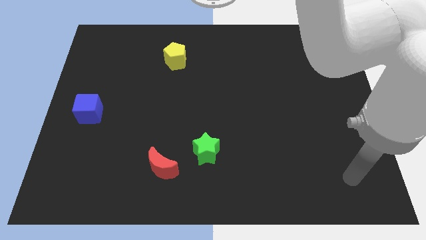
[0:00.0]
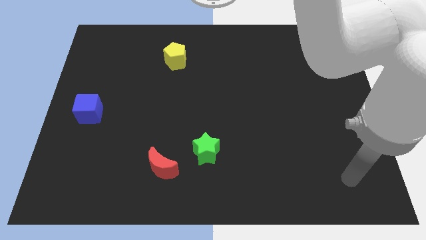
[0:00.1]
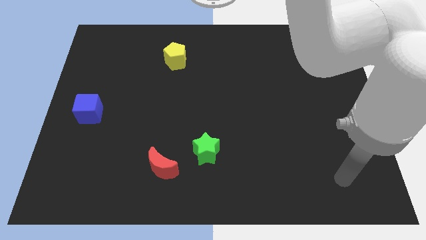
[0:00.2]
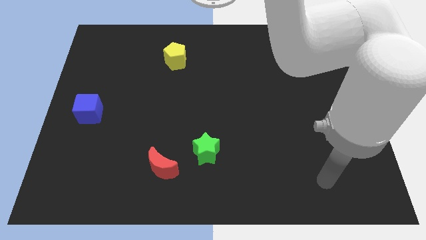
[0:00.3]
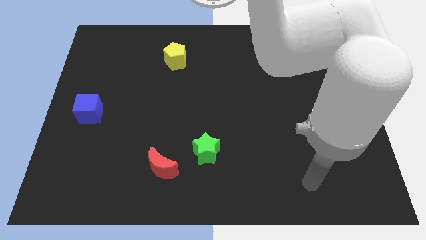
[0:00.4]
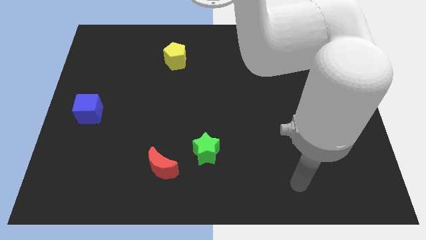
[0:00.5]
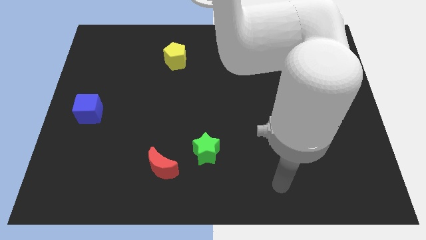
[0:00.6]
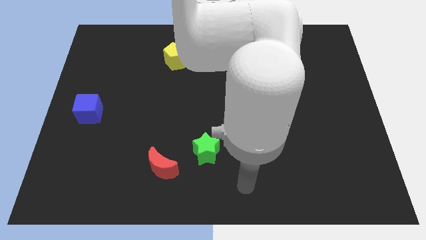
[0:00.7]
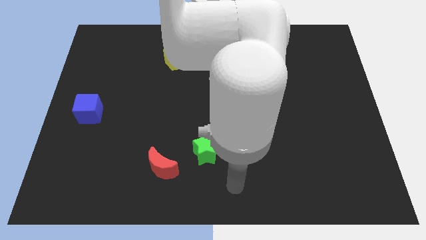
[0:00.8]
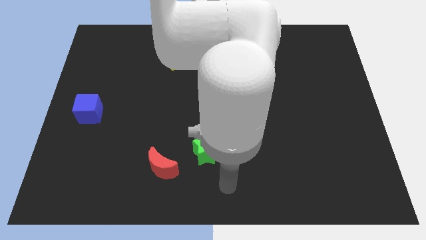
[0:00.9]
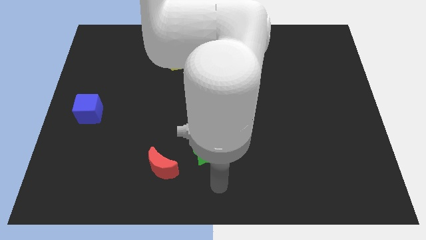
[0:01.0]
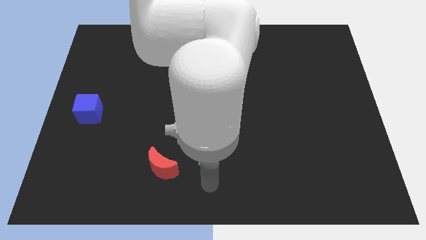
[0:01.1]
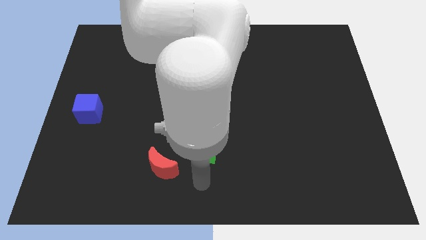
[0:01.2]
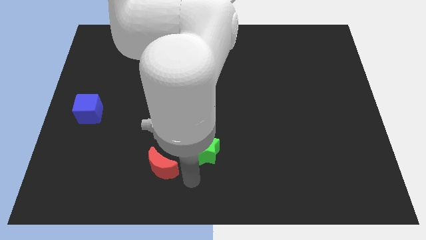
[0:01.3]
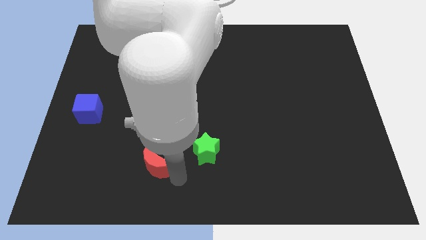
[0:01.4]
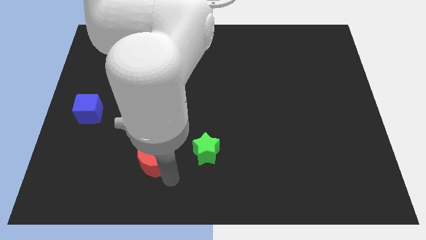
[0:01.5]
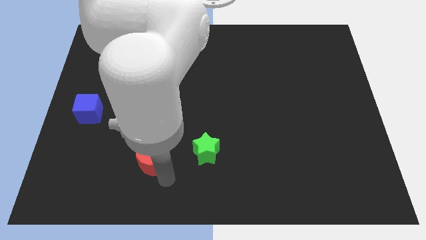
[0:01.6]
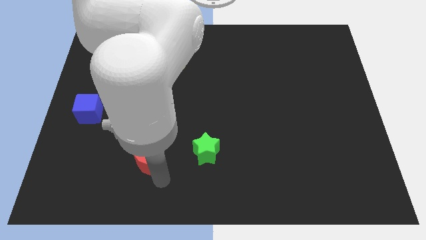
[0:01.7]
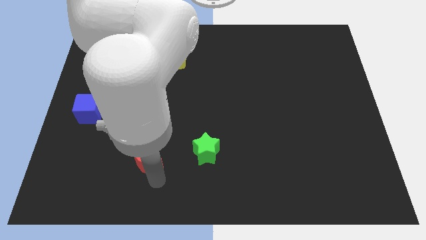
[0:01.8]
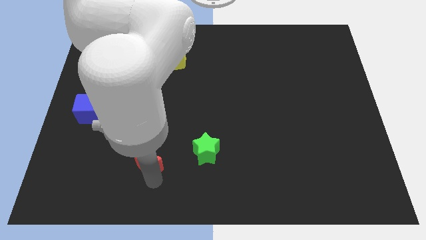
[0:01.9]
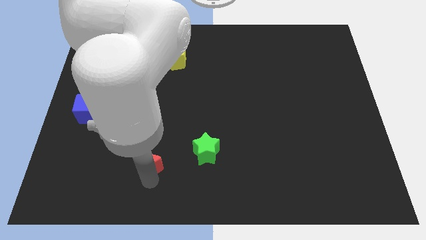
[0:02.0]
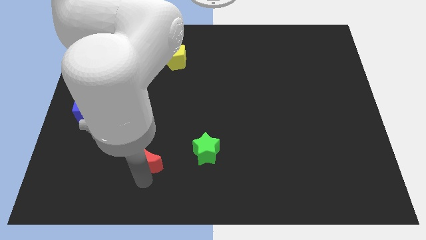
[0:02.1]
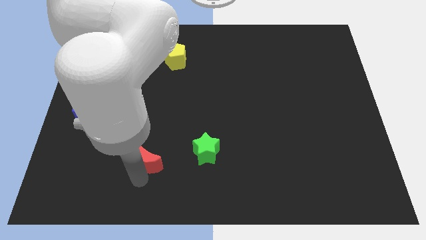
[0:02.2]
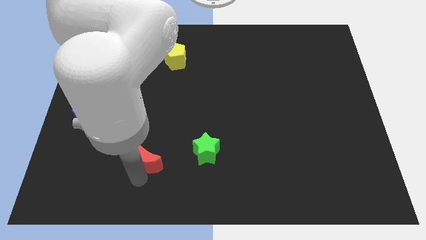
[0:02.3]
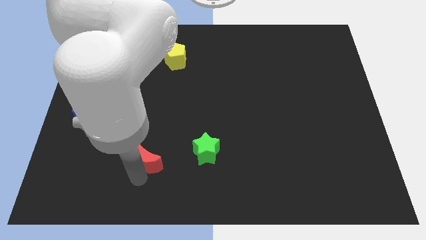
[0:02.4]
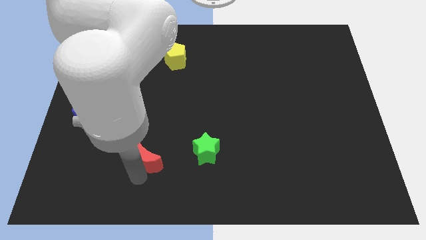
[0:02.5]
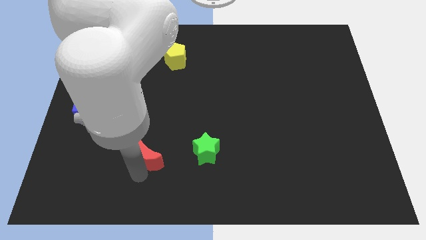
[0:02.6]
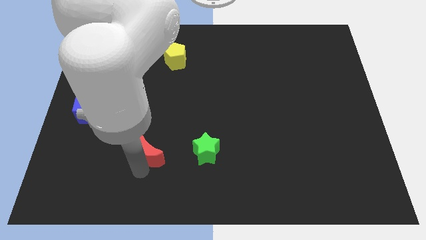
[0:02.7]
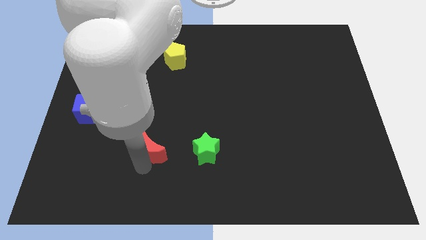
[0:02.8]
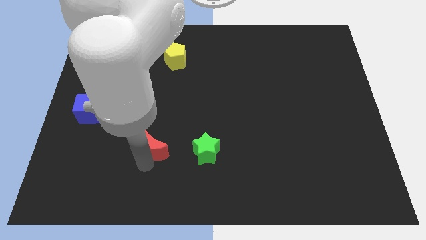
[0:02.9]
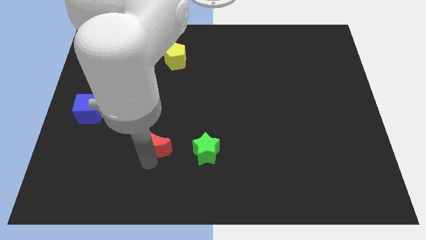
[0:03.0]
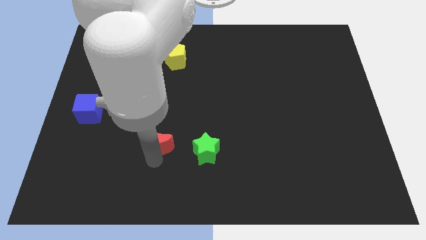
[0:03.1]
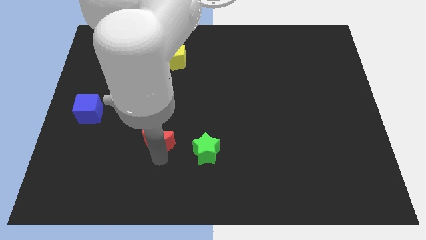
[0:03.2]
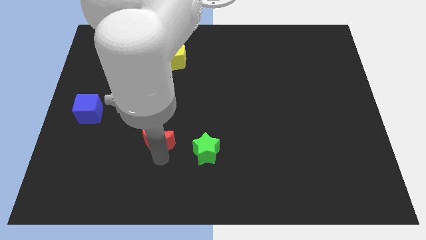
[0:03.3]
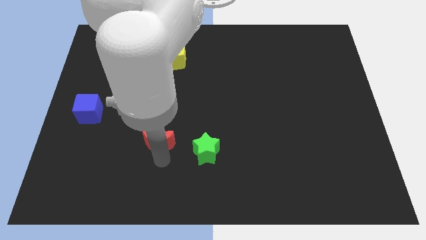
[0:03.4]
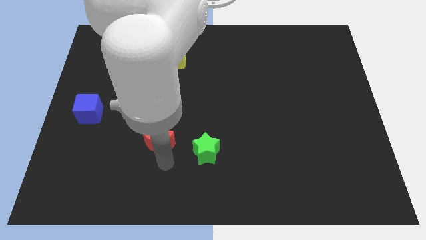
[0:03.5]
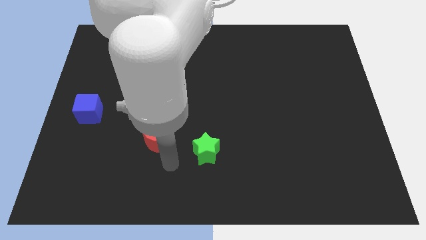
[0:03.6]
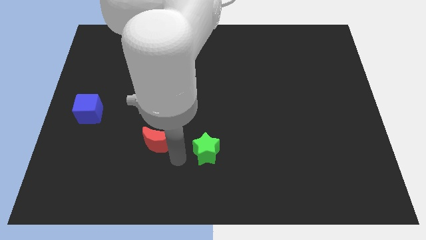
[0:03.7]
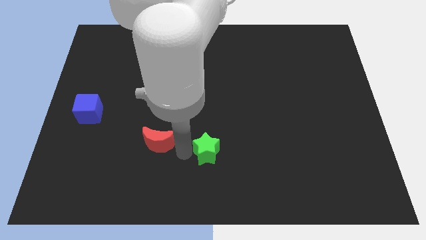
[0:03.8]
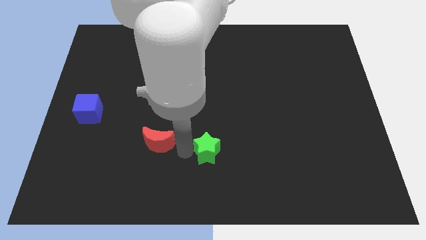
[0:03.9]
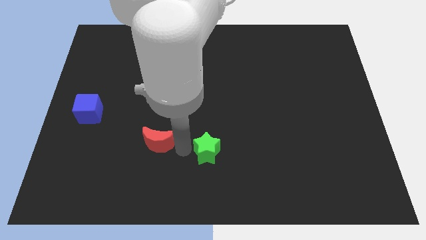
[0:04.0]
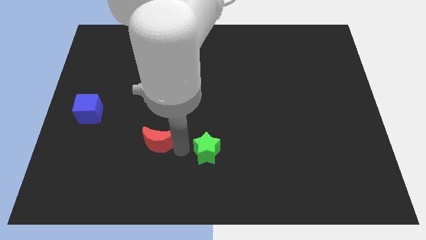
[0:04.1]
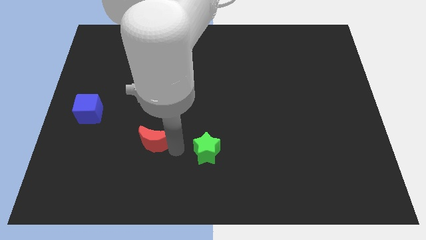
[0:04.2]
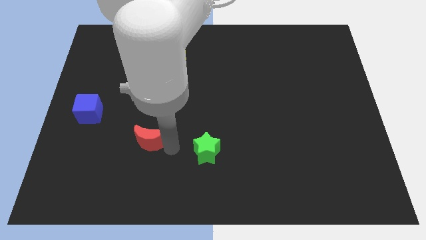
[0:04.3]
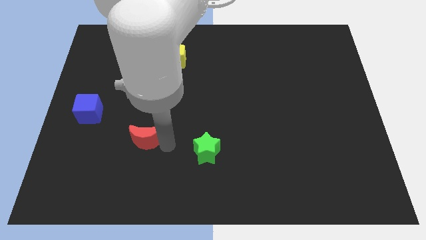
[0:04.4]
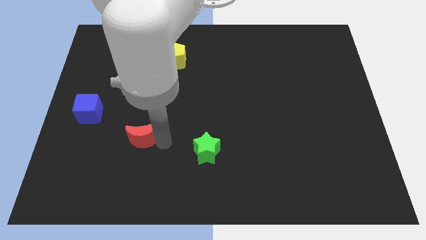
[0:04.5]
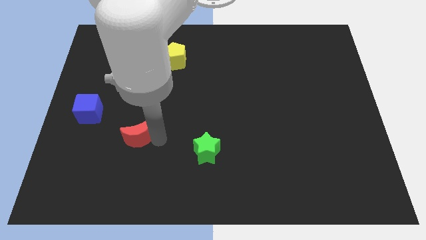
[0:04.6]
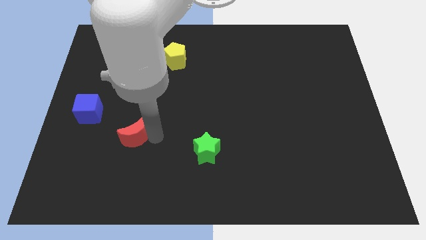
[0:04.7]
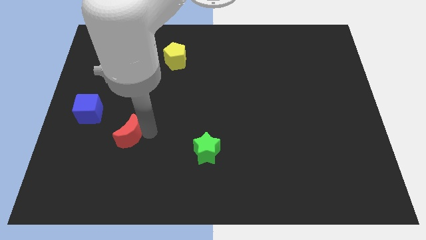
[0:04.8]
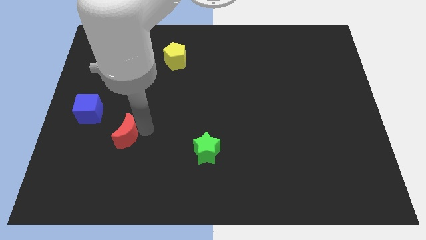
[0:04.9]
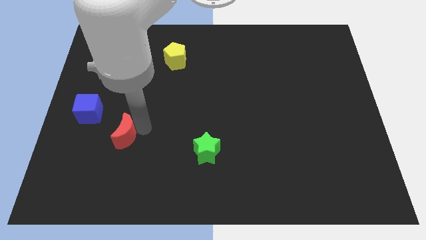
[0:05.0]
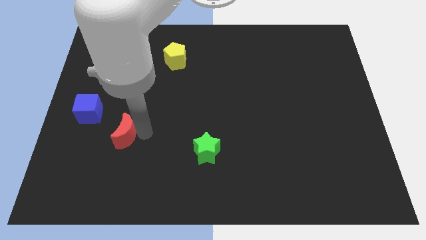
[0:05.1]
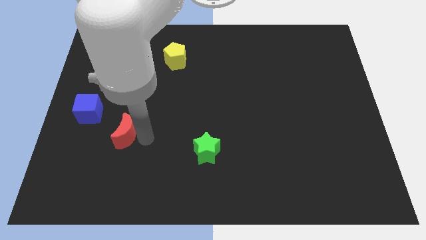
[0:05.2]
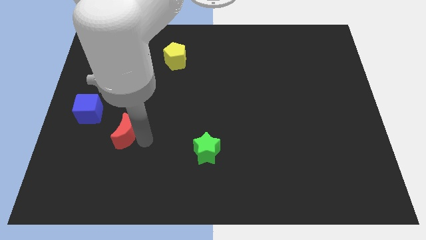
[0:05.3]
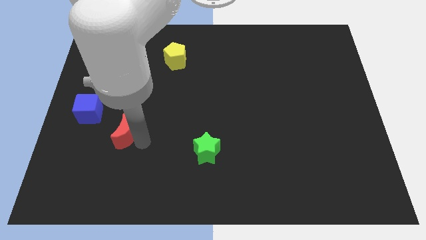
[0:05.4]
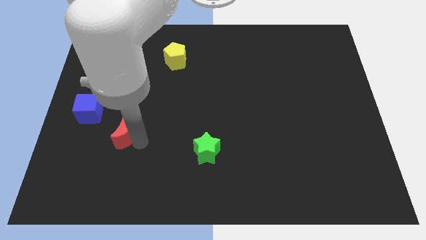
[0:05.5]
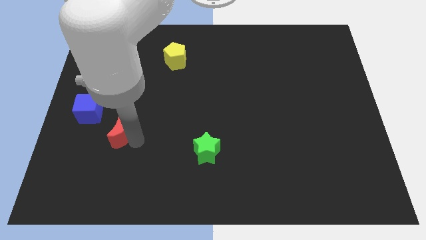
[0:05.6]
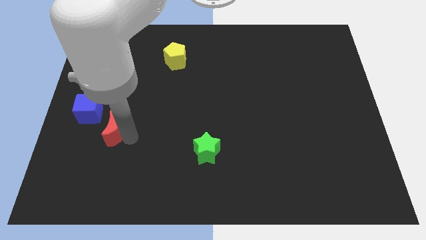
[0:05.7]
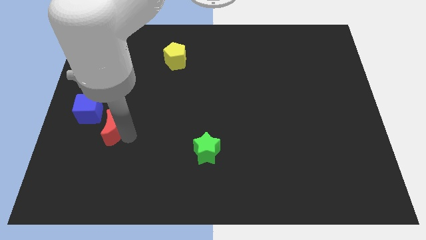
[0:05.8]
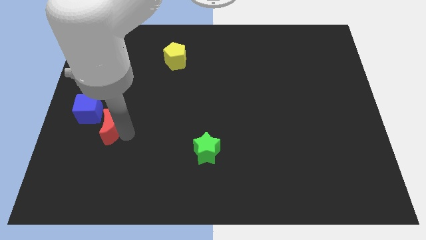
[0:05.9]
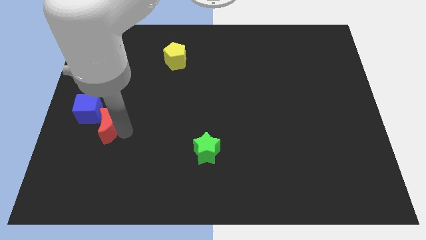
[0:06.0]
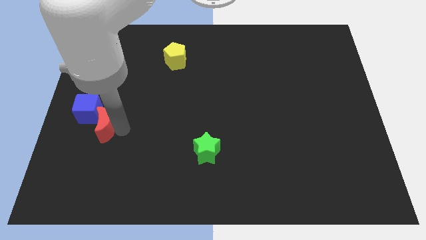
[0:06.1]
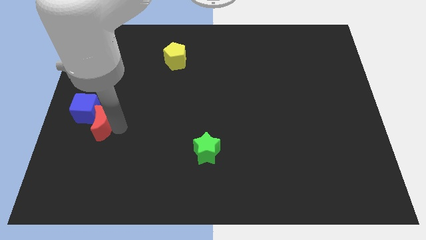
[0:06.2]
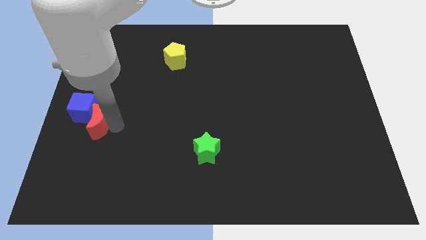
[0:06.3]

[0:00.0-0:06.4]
put the red moon towards the blue cube

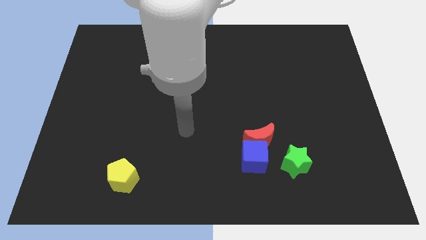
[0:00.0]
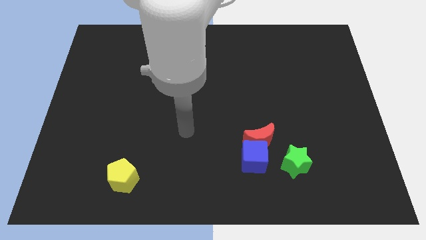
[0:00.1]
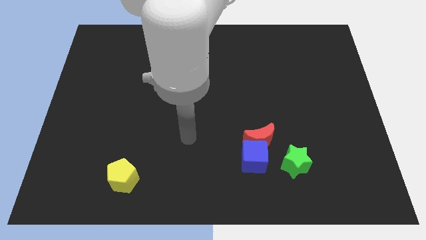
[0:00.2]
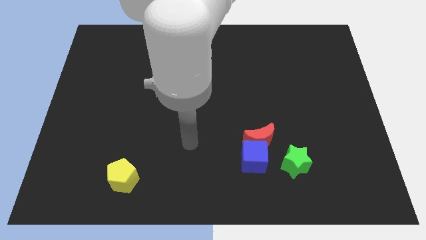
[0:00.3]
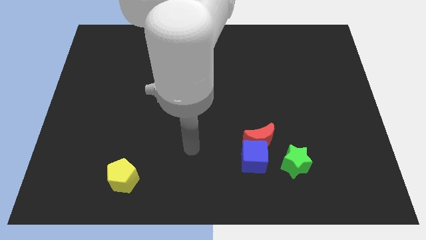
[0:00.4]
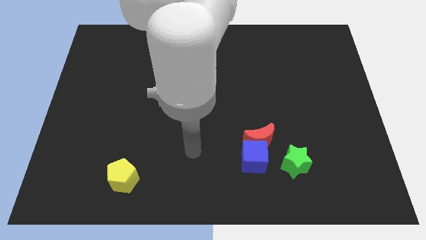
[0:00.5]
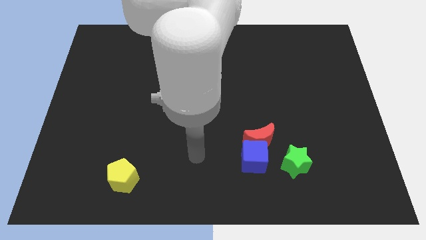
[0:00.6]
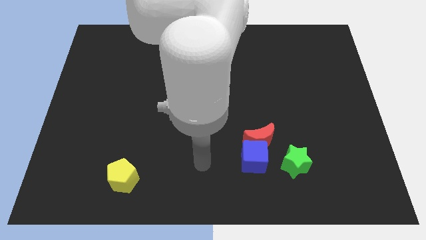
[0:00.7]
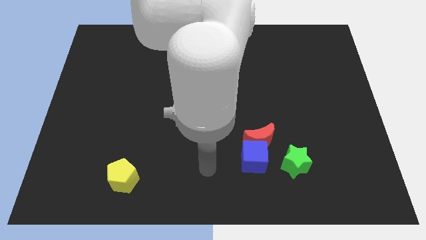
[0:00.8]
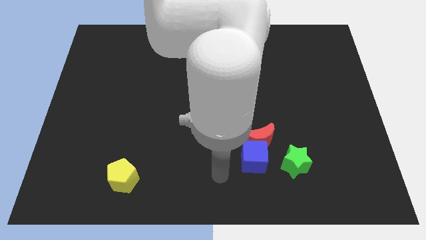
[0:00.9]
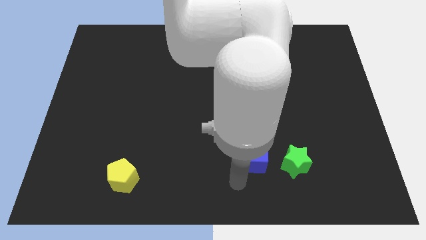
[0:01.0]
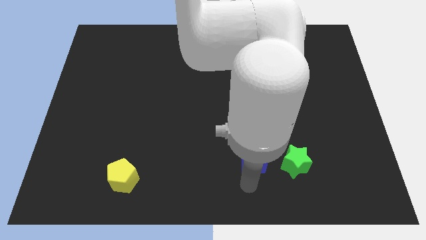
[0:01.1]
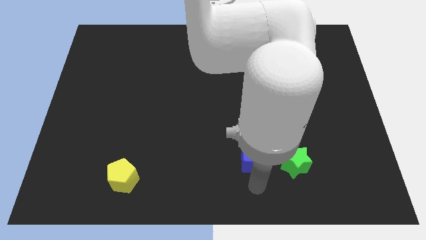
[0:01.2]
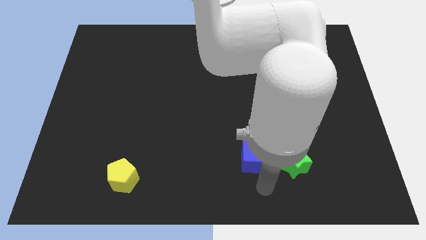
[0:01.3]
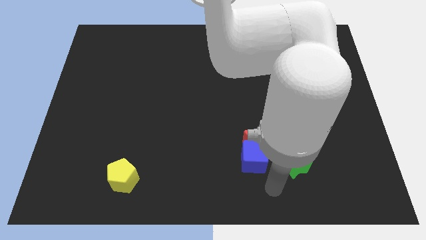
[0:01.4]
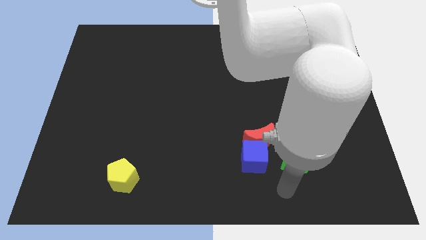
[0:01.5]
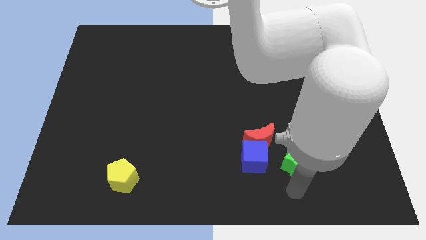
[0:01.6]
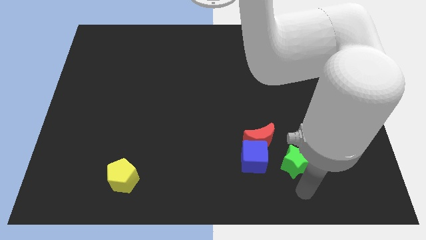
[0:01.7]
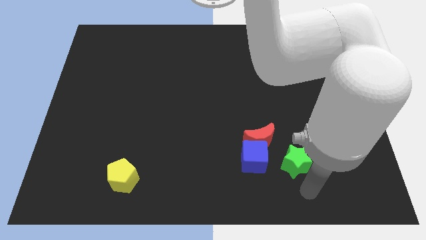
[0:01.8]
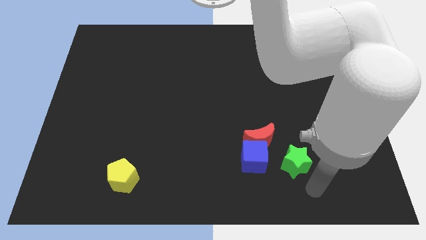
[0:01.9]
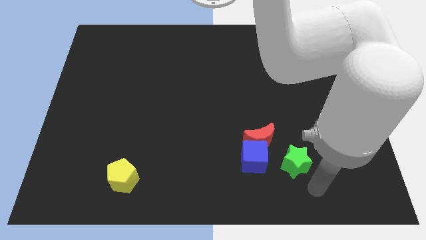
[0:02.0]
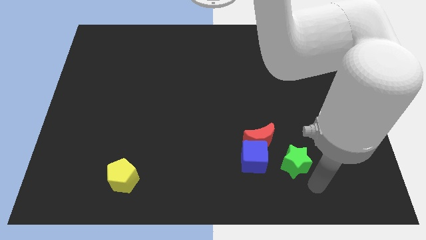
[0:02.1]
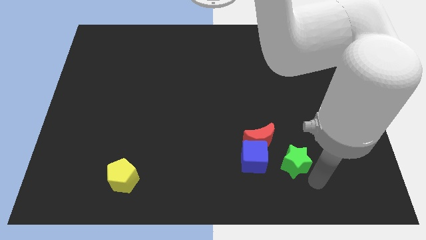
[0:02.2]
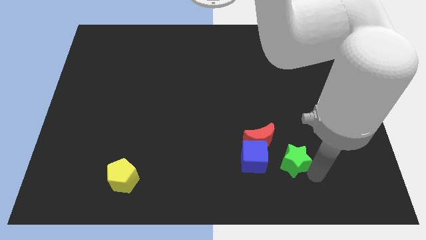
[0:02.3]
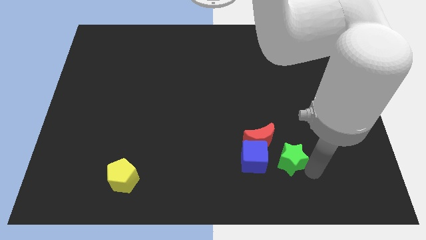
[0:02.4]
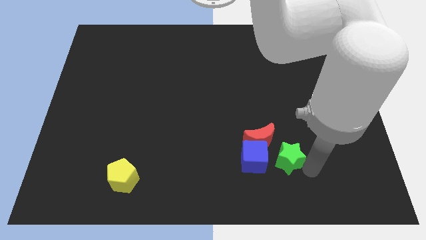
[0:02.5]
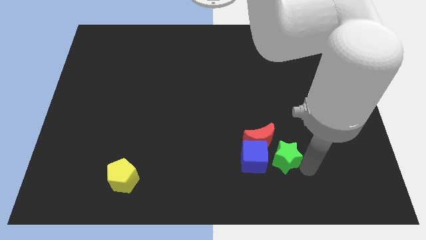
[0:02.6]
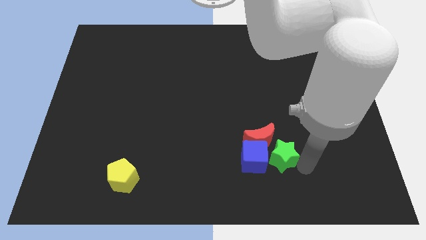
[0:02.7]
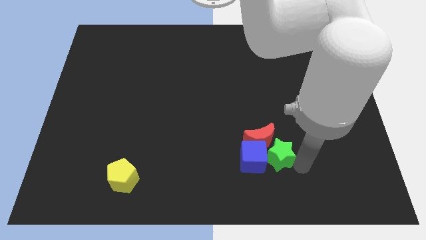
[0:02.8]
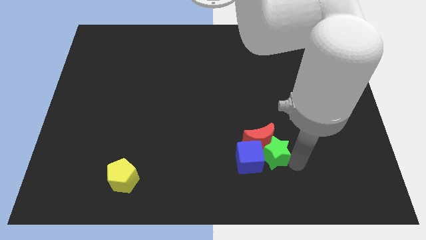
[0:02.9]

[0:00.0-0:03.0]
slide the star close to the red block
